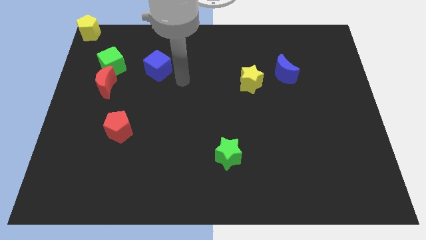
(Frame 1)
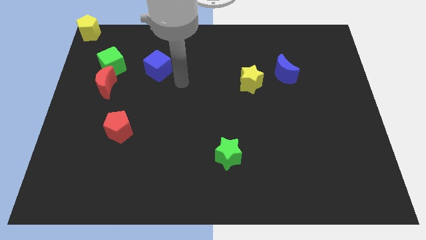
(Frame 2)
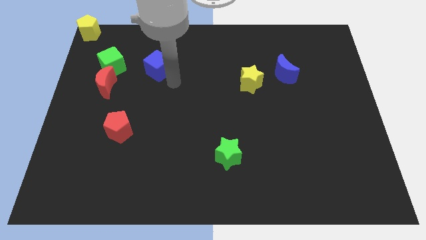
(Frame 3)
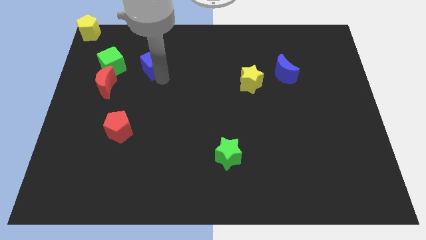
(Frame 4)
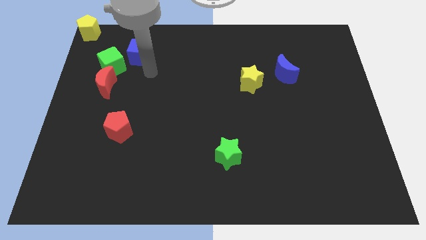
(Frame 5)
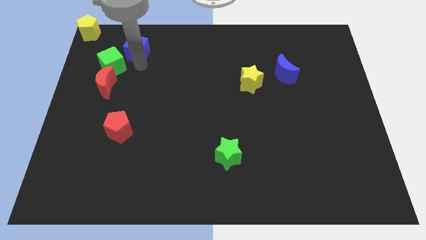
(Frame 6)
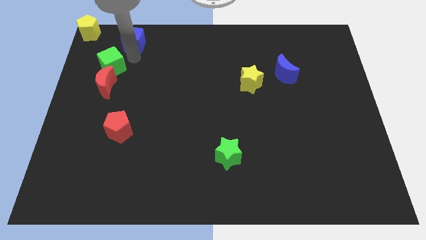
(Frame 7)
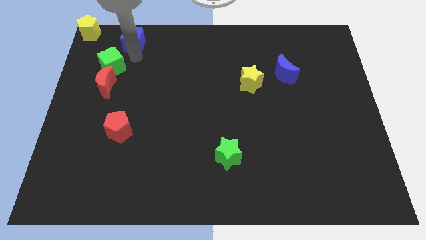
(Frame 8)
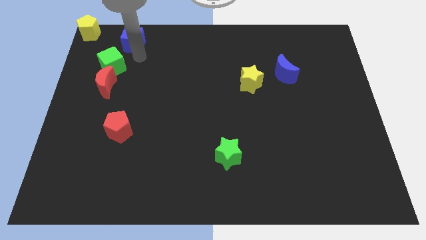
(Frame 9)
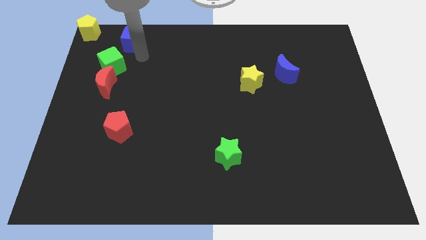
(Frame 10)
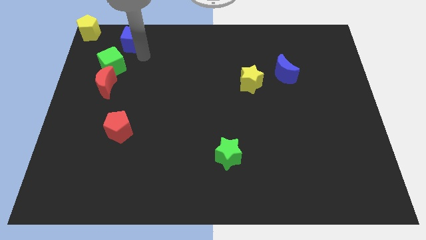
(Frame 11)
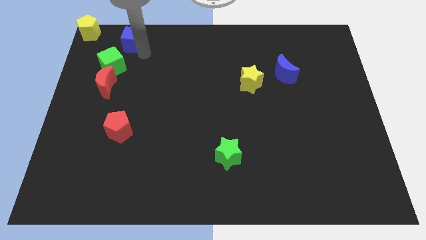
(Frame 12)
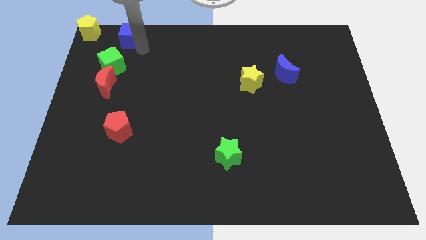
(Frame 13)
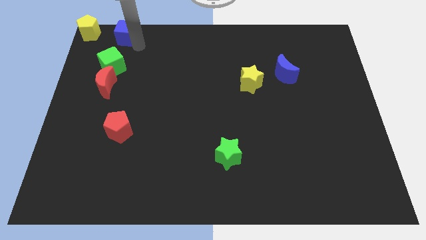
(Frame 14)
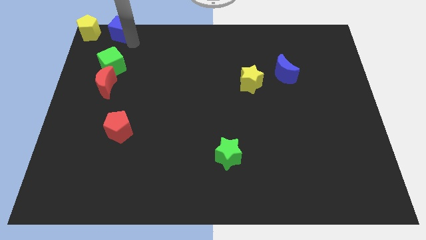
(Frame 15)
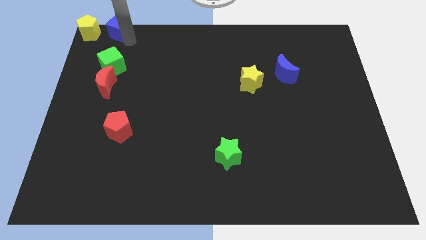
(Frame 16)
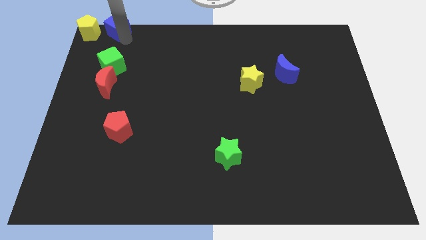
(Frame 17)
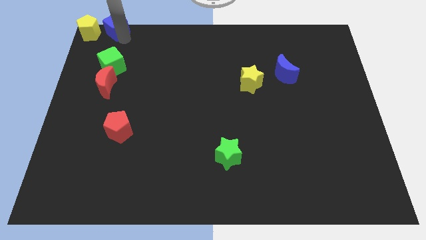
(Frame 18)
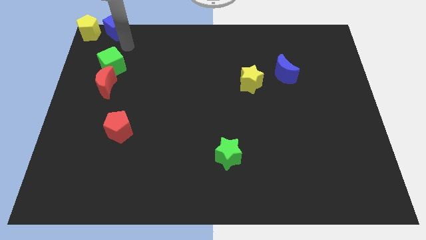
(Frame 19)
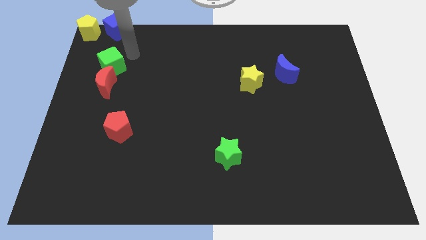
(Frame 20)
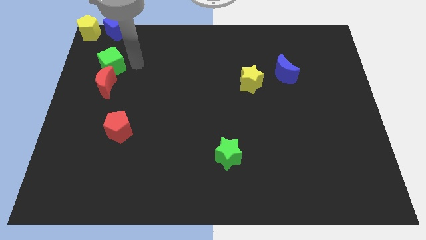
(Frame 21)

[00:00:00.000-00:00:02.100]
move the blue cube to the right side of the yellow pentagon

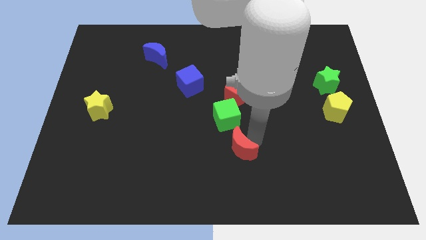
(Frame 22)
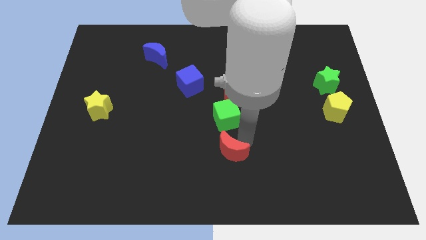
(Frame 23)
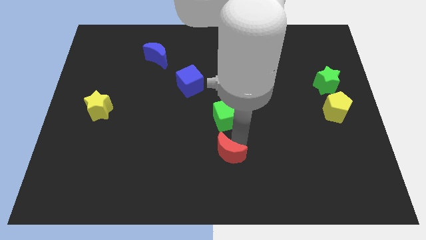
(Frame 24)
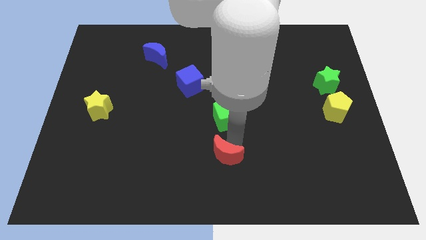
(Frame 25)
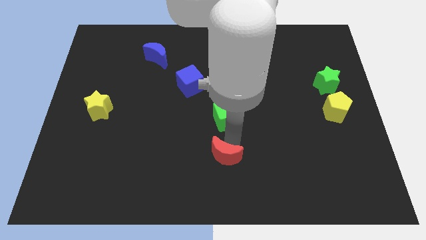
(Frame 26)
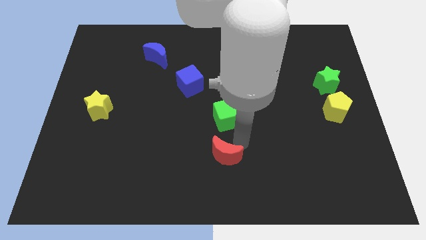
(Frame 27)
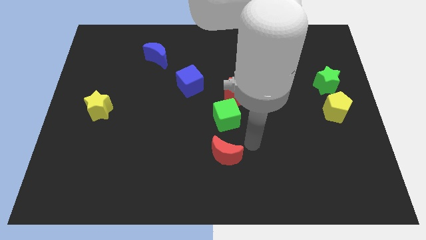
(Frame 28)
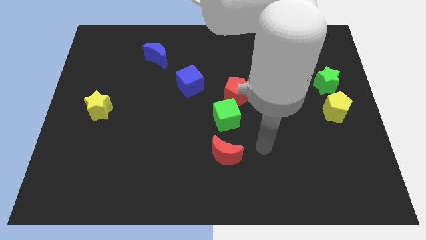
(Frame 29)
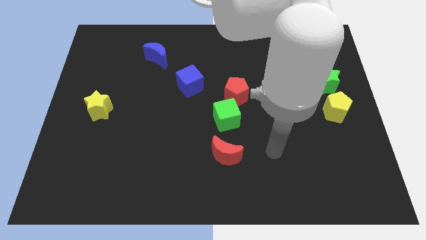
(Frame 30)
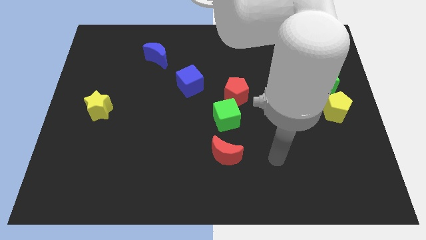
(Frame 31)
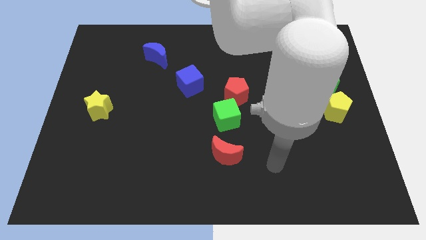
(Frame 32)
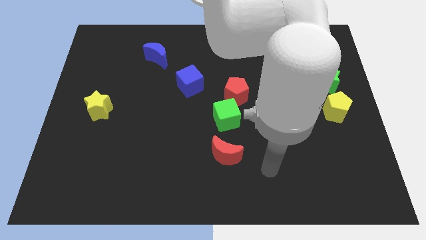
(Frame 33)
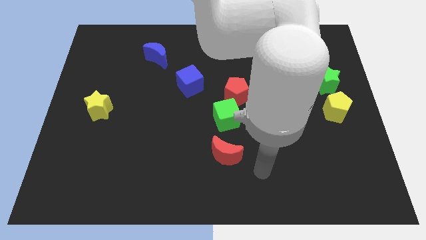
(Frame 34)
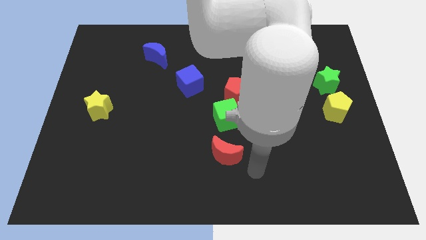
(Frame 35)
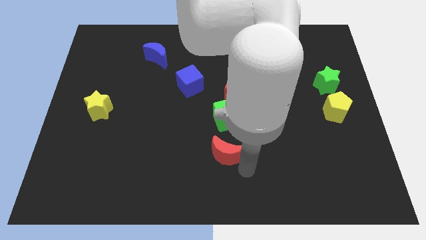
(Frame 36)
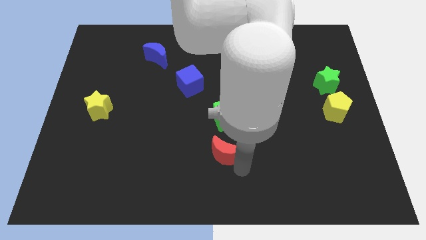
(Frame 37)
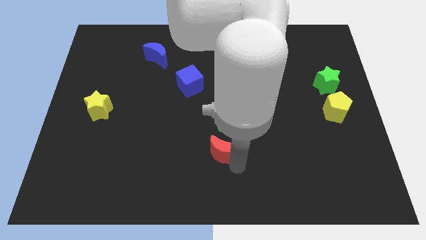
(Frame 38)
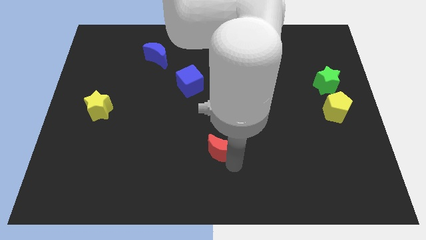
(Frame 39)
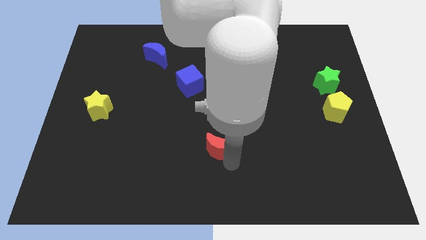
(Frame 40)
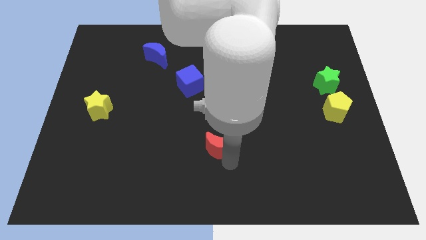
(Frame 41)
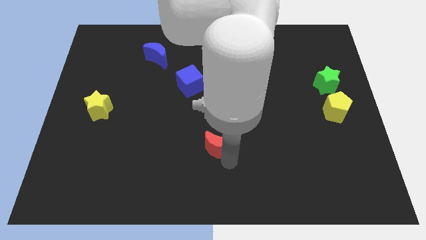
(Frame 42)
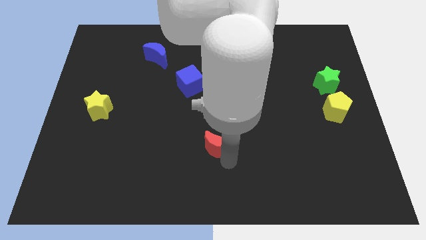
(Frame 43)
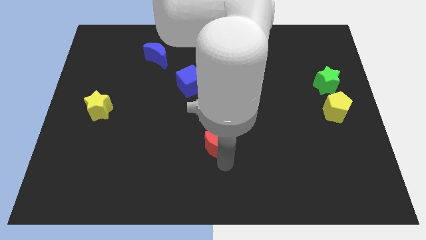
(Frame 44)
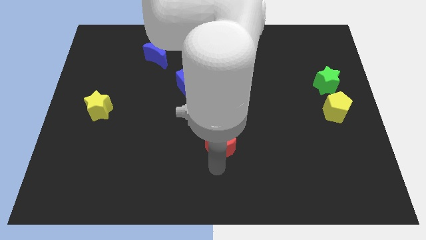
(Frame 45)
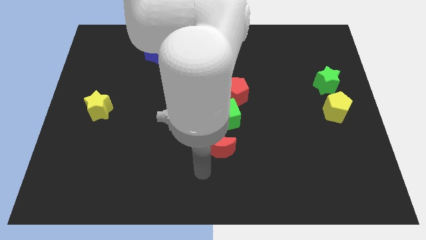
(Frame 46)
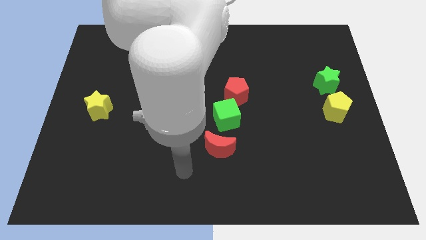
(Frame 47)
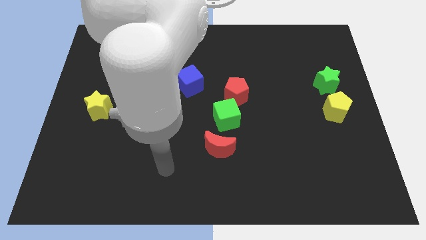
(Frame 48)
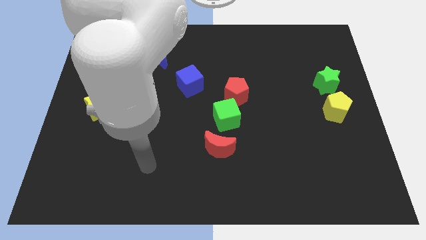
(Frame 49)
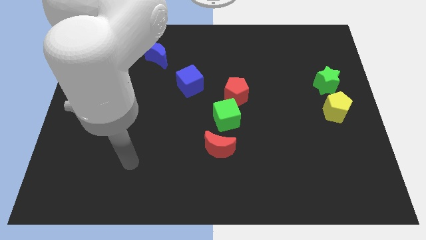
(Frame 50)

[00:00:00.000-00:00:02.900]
move the red crescent closer to the green cube

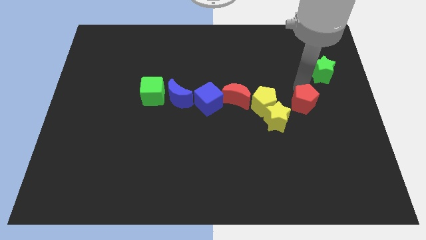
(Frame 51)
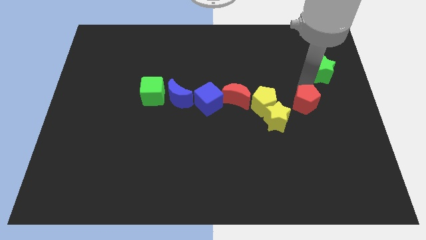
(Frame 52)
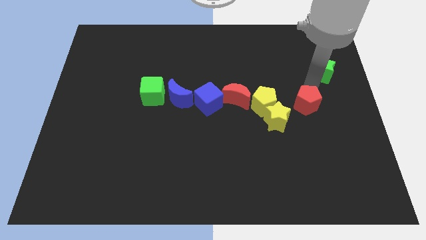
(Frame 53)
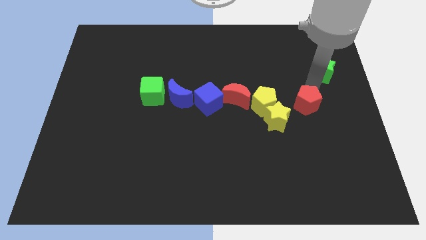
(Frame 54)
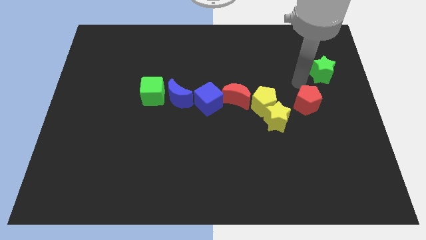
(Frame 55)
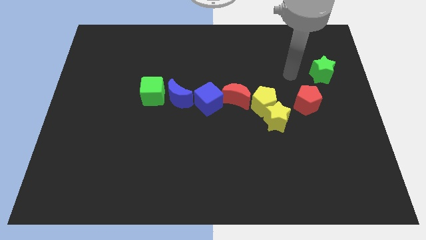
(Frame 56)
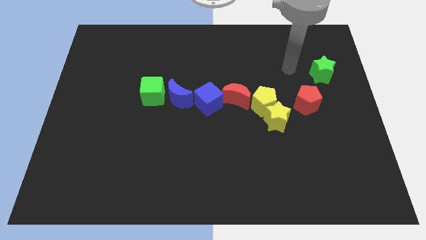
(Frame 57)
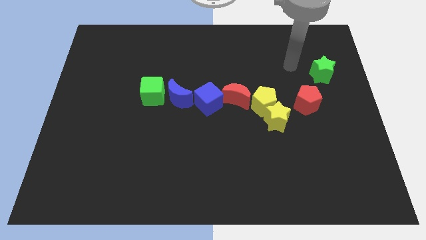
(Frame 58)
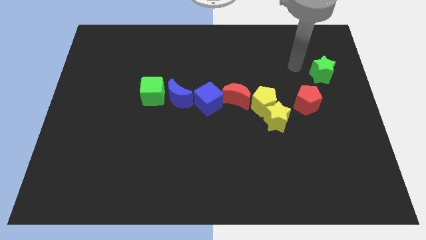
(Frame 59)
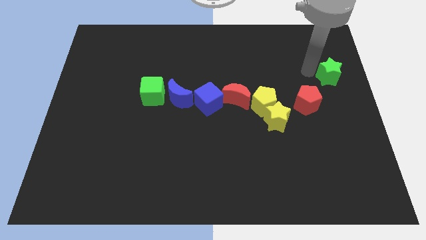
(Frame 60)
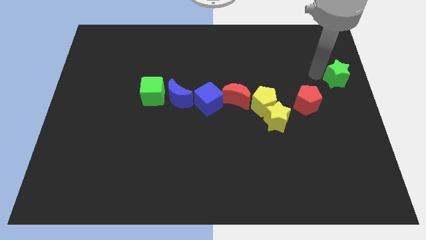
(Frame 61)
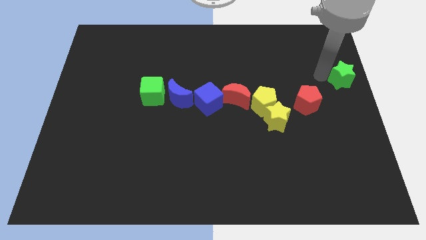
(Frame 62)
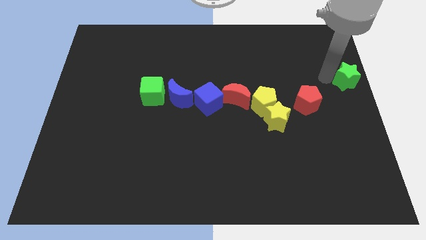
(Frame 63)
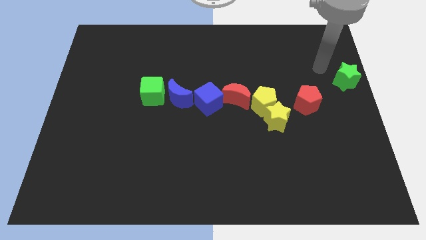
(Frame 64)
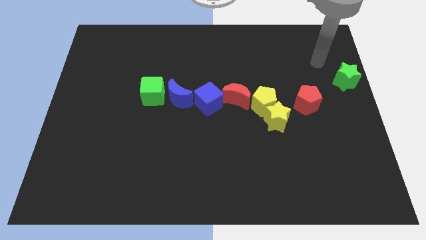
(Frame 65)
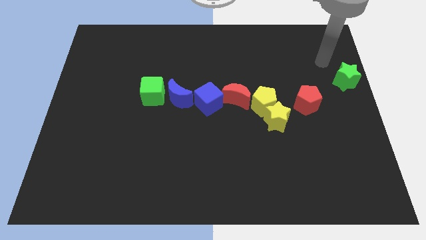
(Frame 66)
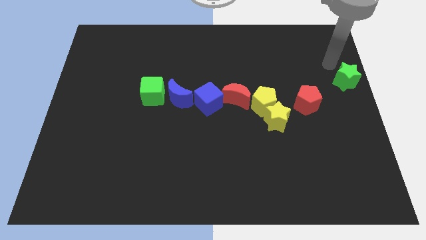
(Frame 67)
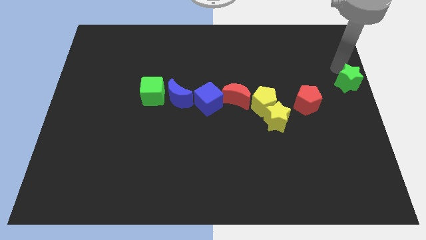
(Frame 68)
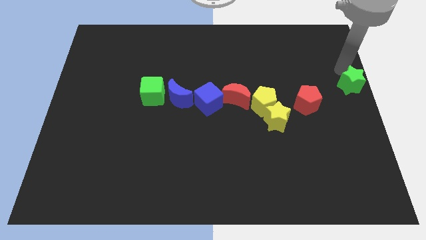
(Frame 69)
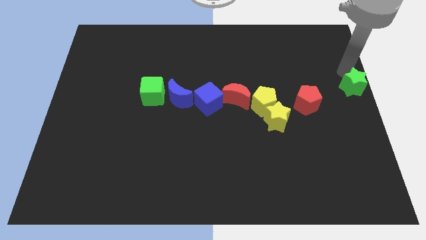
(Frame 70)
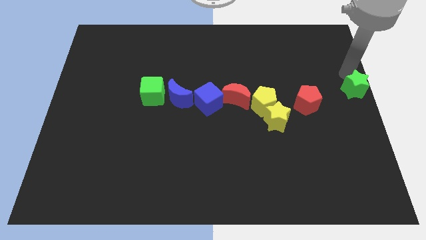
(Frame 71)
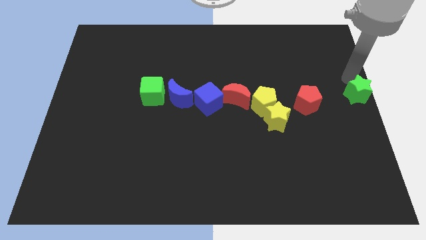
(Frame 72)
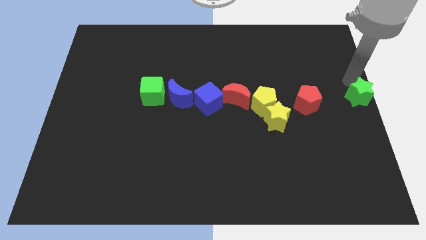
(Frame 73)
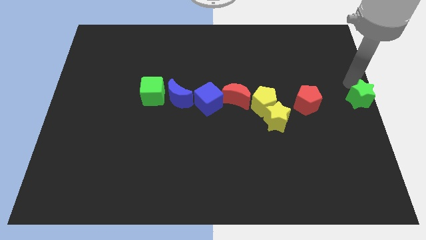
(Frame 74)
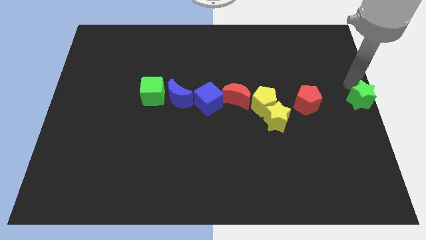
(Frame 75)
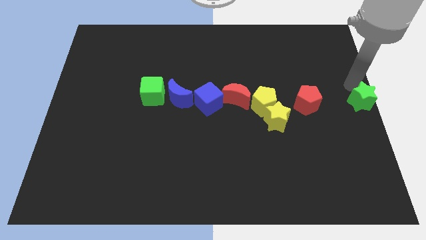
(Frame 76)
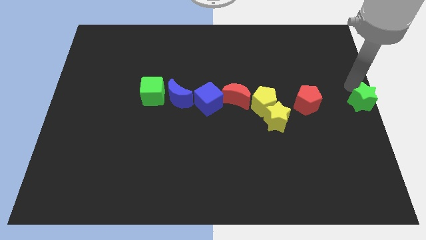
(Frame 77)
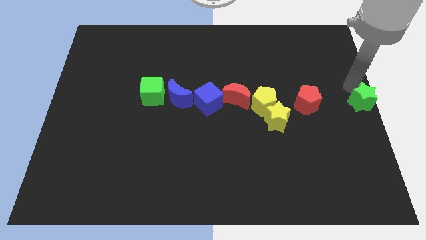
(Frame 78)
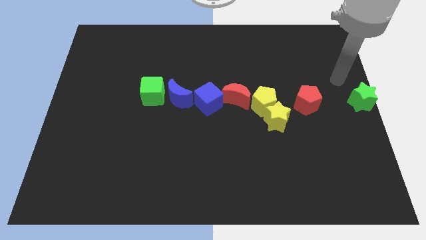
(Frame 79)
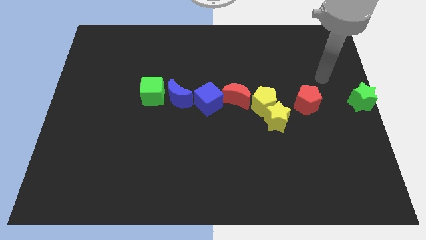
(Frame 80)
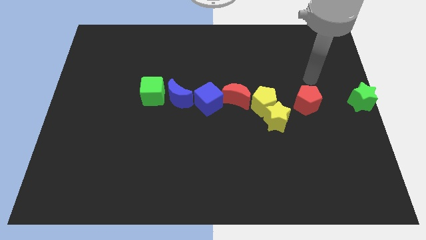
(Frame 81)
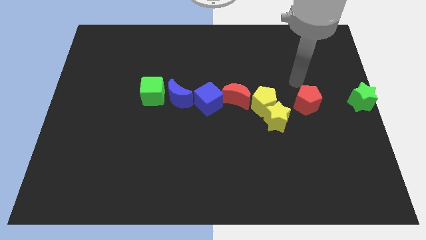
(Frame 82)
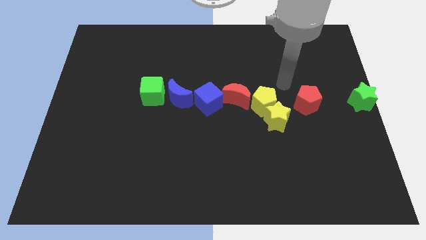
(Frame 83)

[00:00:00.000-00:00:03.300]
push the green star to the right side of the red pentagon

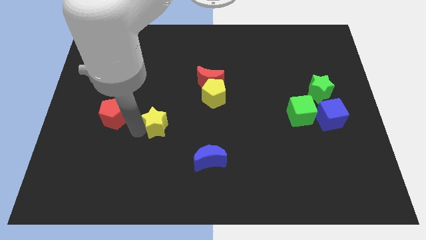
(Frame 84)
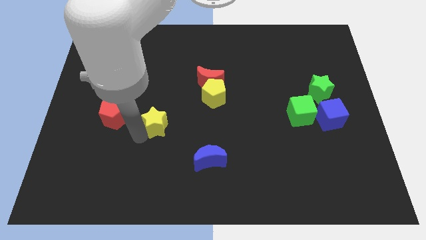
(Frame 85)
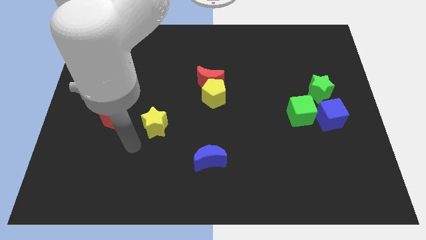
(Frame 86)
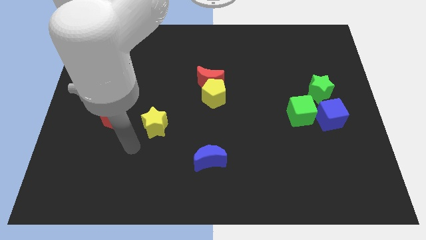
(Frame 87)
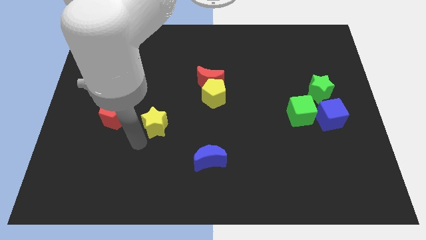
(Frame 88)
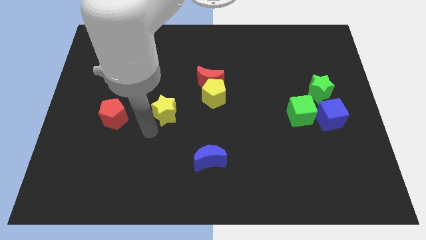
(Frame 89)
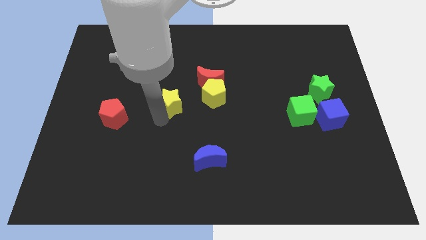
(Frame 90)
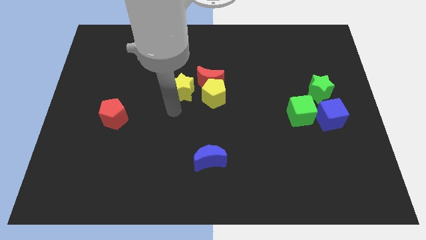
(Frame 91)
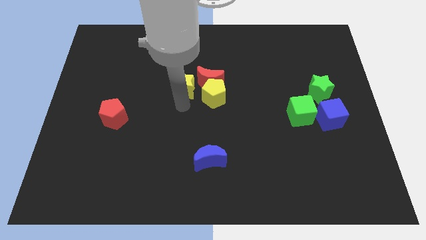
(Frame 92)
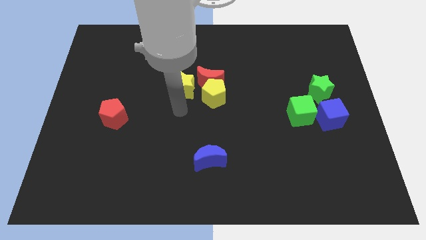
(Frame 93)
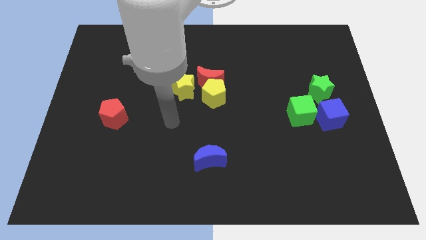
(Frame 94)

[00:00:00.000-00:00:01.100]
move the yellow star left to the yellow pentagon
